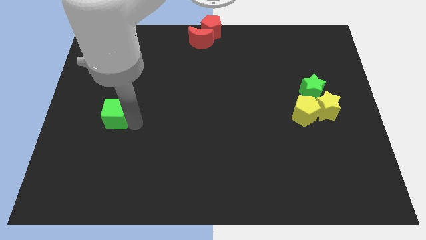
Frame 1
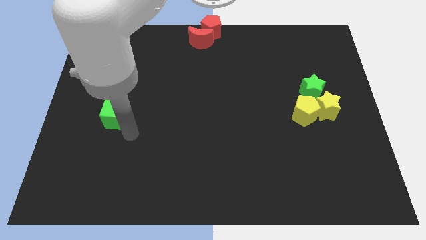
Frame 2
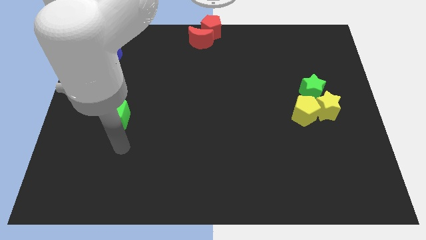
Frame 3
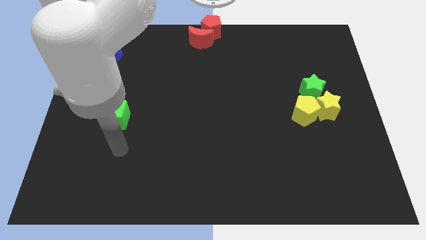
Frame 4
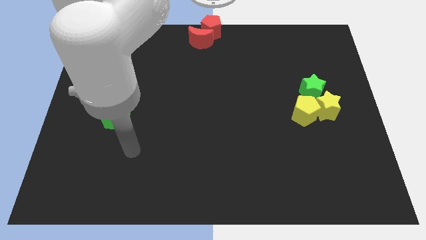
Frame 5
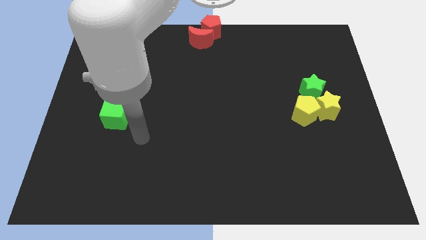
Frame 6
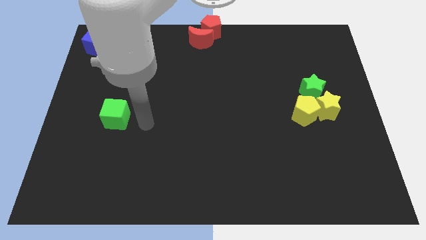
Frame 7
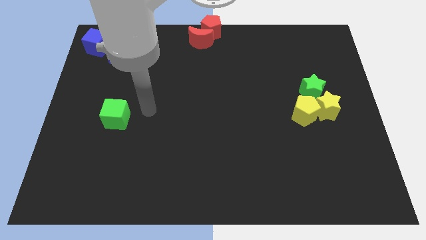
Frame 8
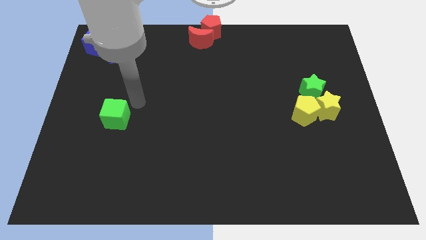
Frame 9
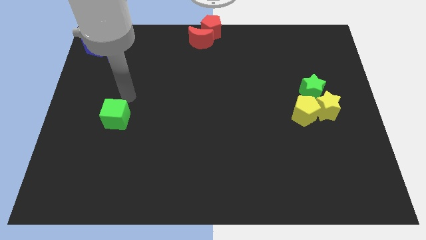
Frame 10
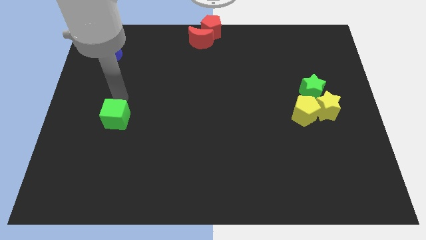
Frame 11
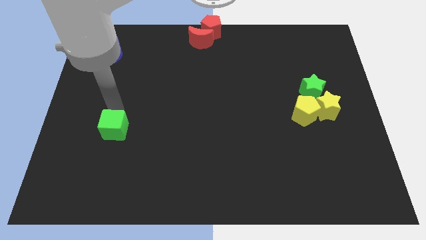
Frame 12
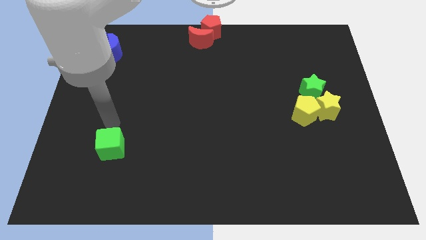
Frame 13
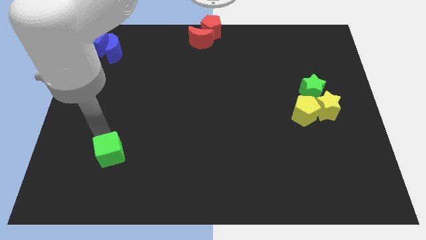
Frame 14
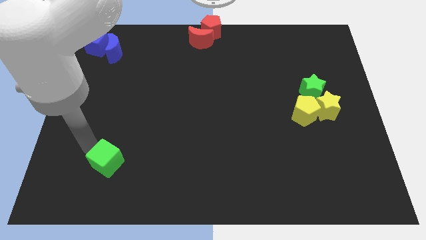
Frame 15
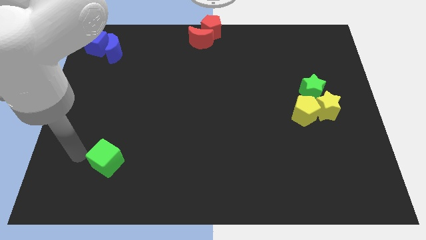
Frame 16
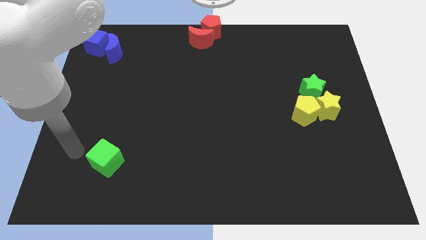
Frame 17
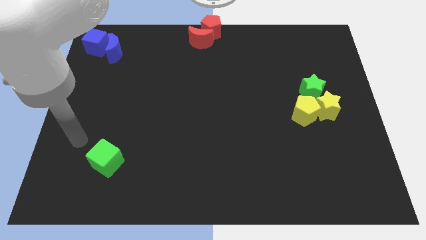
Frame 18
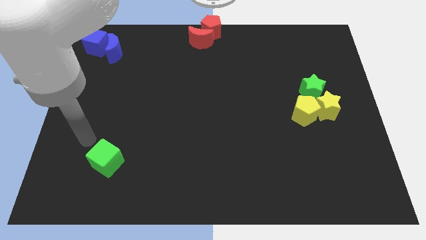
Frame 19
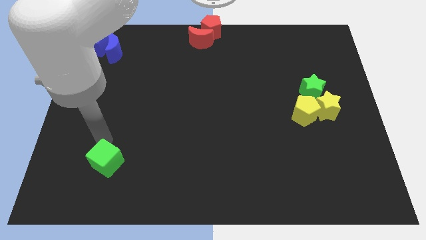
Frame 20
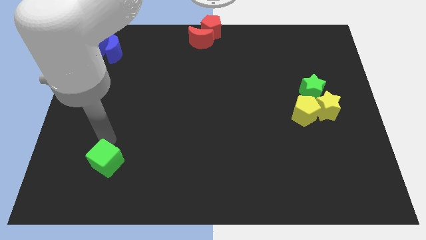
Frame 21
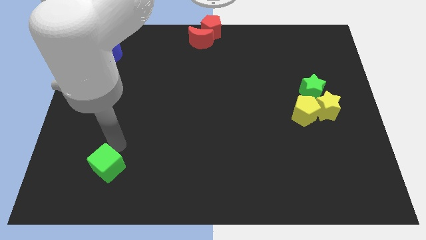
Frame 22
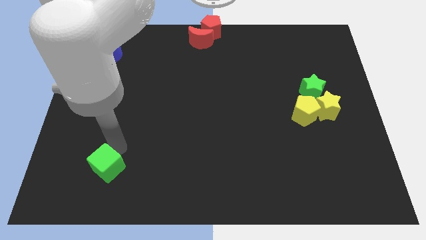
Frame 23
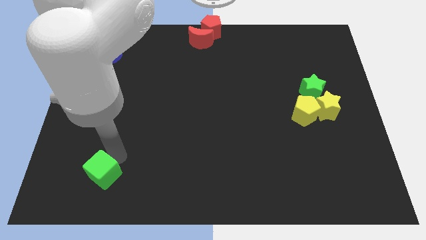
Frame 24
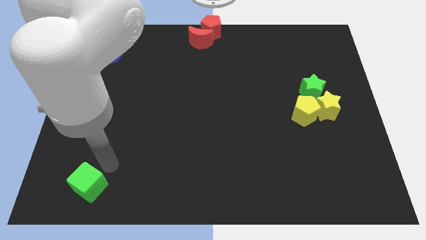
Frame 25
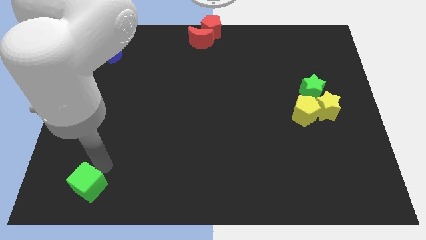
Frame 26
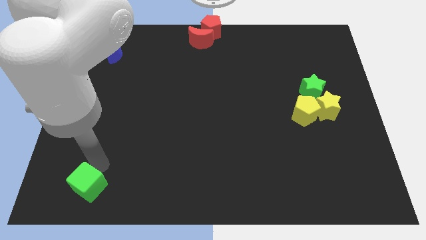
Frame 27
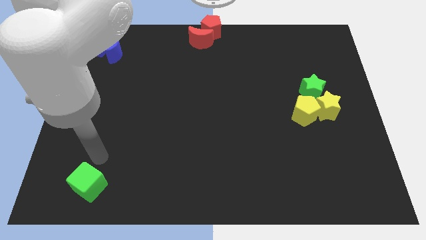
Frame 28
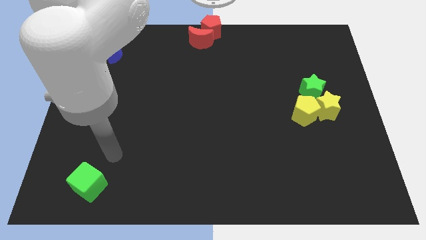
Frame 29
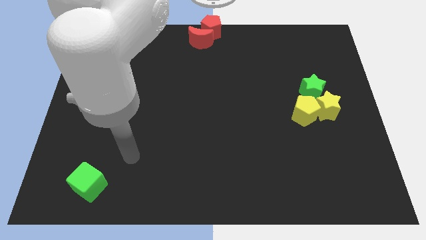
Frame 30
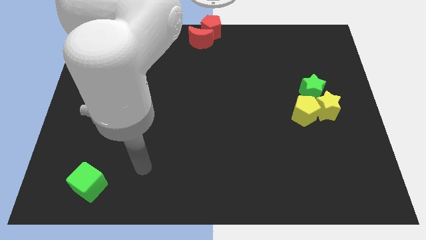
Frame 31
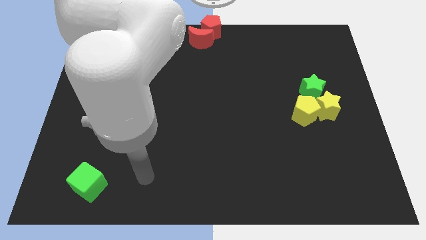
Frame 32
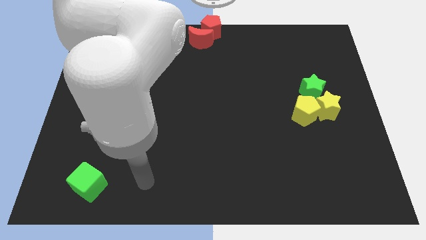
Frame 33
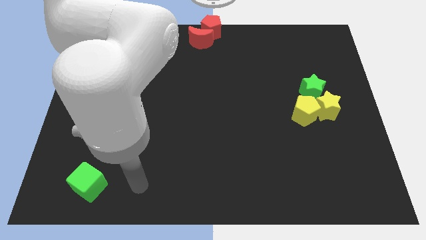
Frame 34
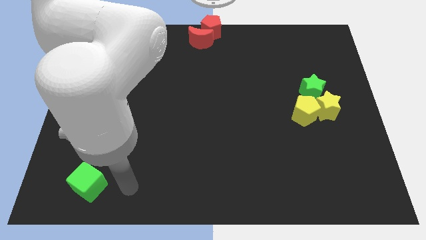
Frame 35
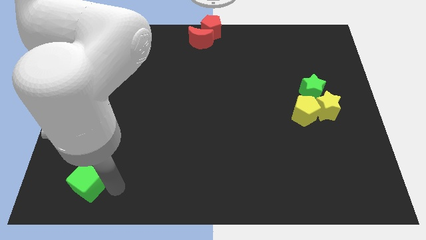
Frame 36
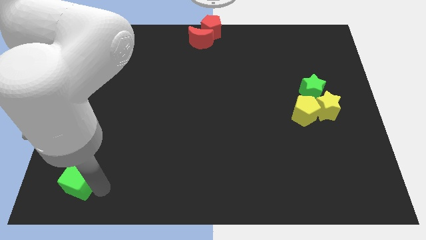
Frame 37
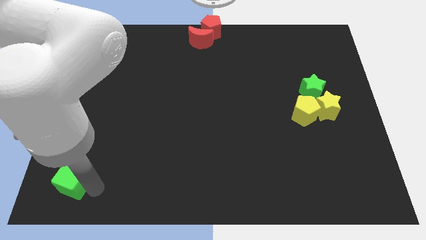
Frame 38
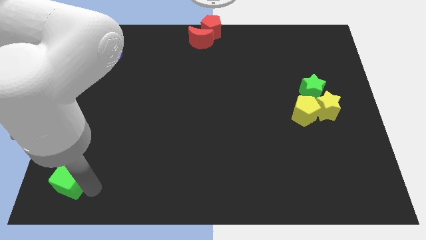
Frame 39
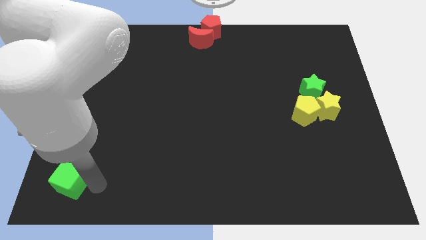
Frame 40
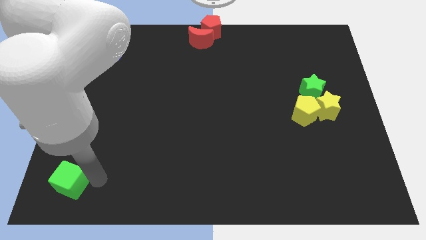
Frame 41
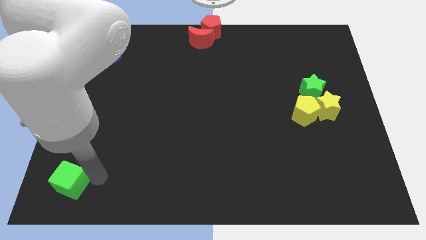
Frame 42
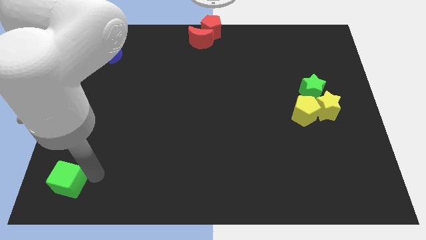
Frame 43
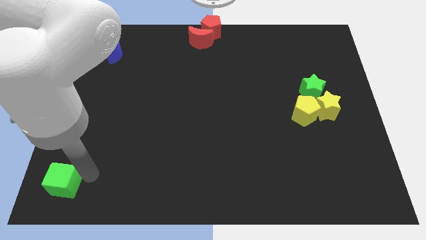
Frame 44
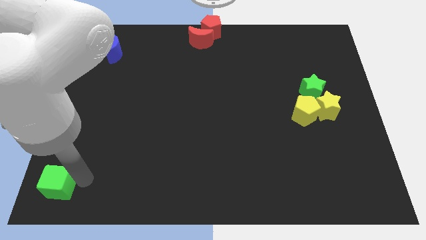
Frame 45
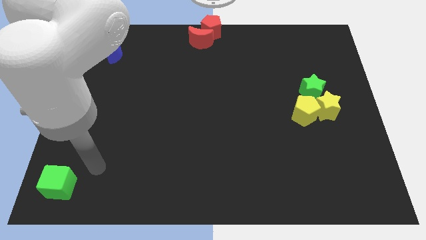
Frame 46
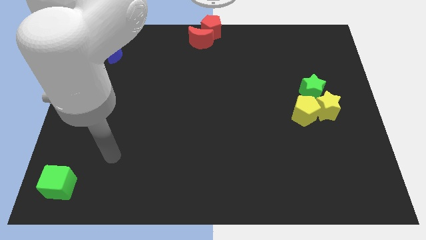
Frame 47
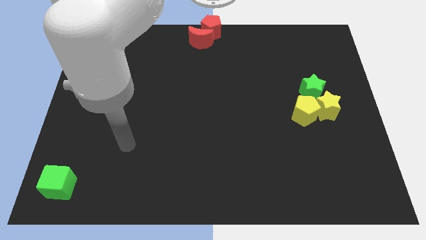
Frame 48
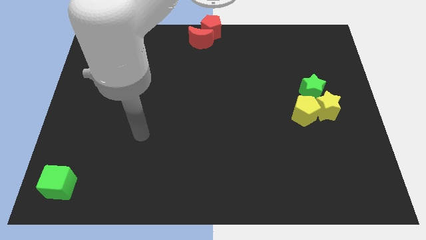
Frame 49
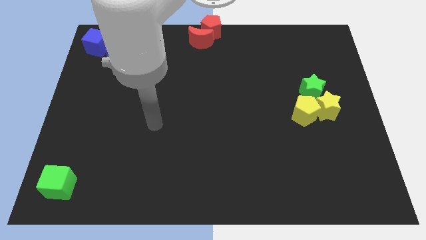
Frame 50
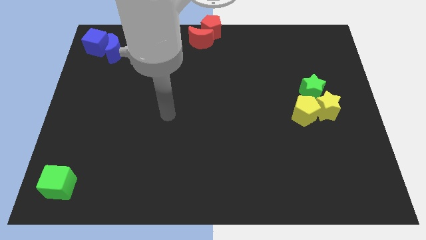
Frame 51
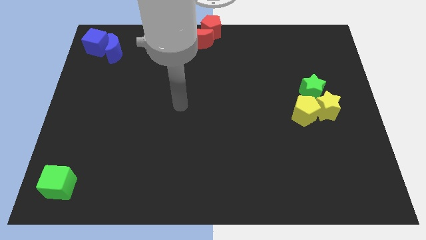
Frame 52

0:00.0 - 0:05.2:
move green cube to the bottom left corner of the board

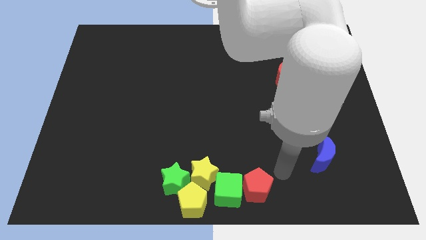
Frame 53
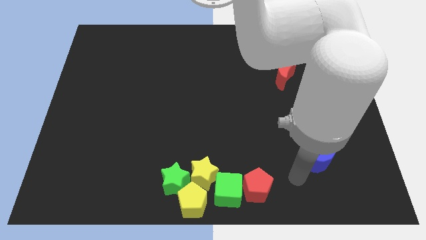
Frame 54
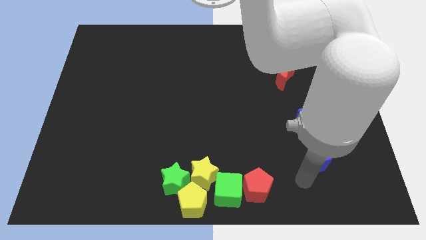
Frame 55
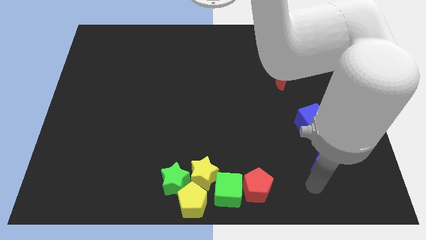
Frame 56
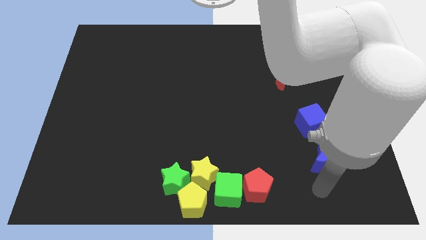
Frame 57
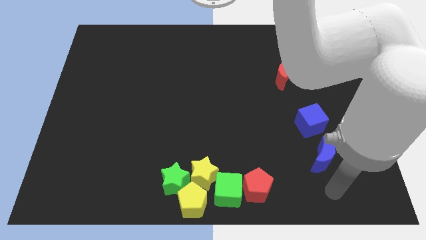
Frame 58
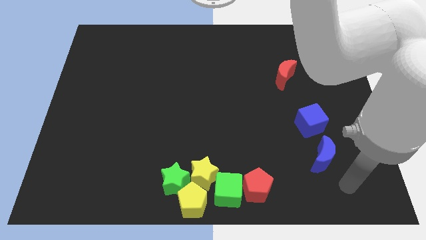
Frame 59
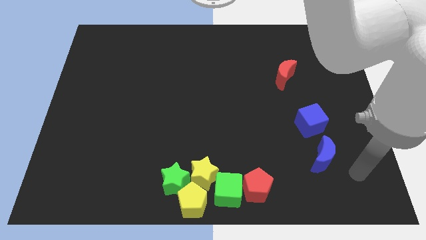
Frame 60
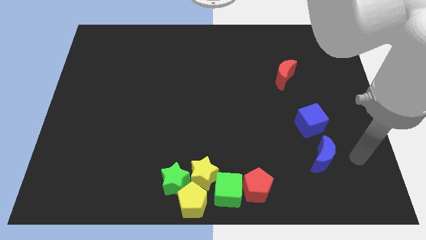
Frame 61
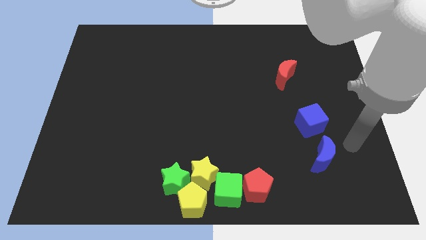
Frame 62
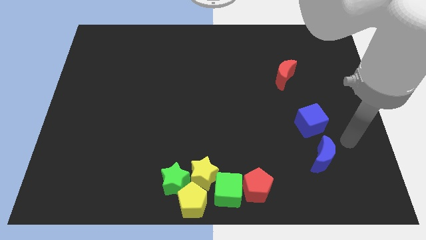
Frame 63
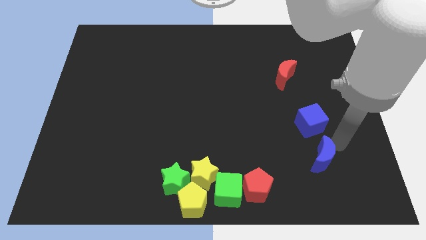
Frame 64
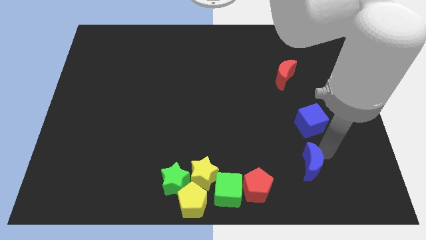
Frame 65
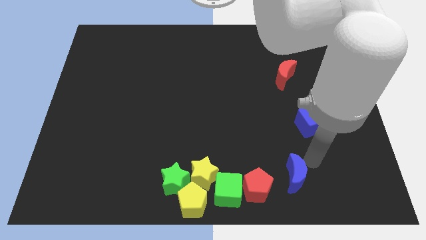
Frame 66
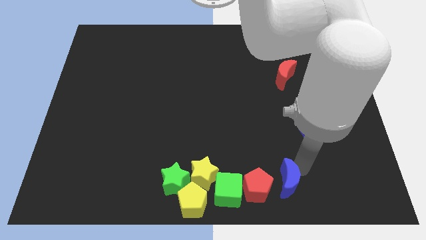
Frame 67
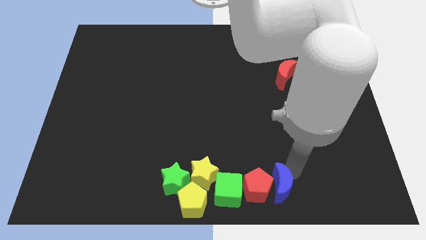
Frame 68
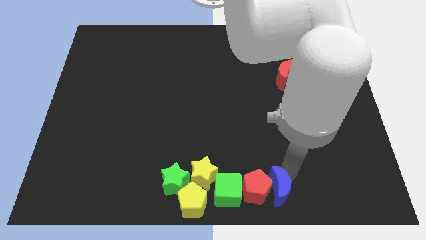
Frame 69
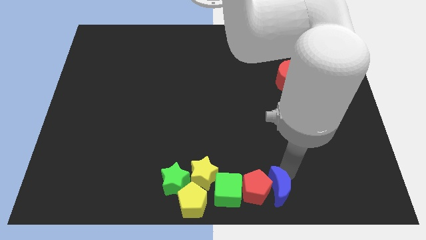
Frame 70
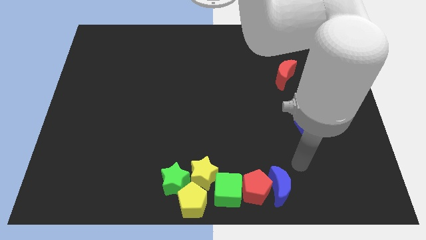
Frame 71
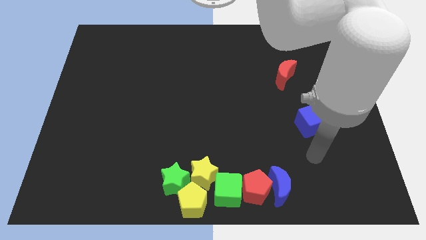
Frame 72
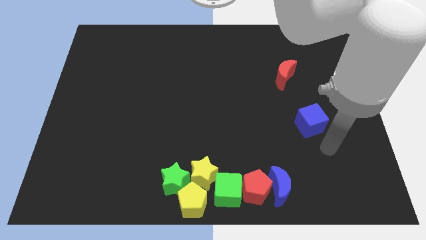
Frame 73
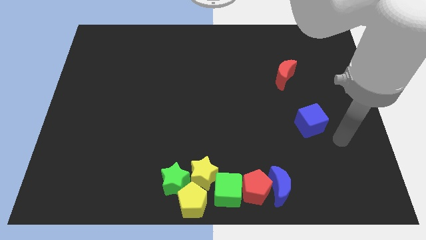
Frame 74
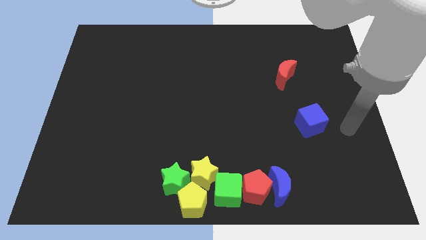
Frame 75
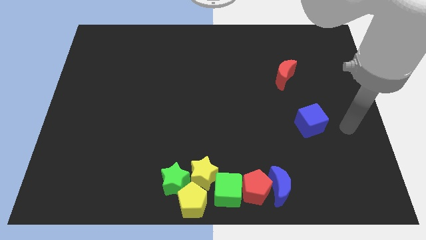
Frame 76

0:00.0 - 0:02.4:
move the blue crescent into the red pentagon

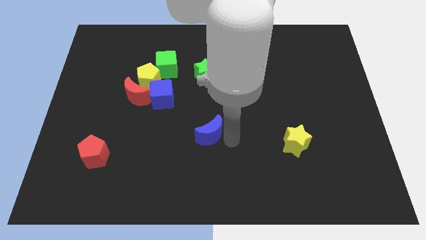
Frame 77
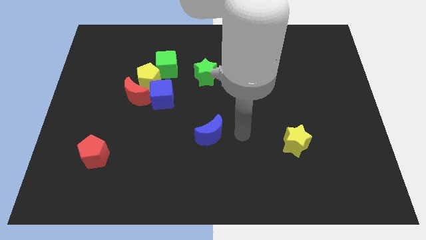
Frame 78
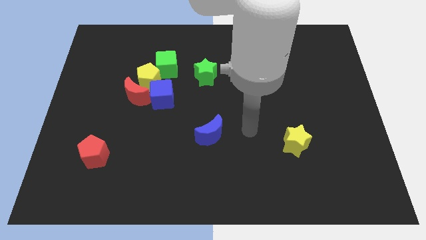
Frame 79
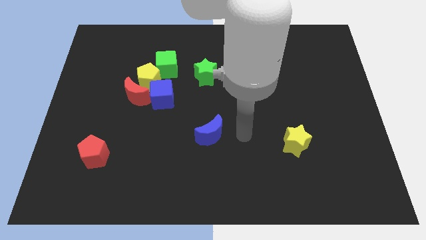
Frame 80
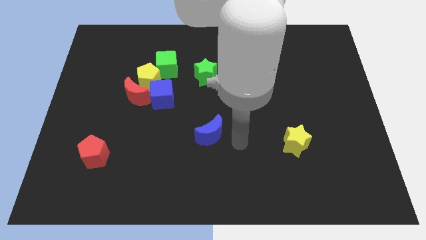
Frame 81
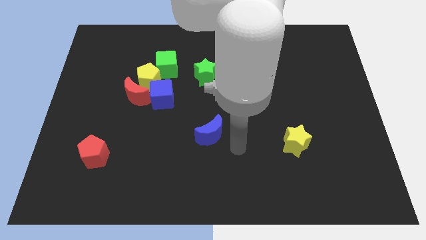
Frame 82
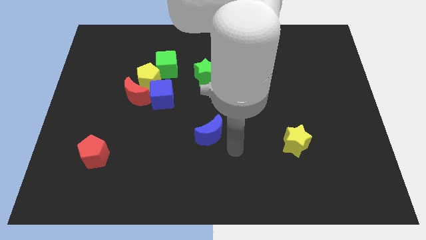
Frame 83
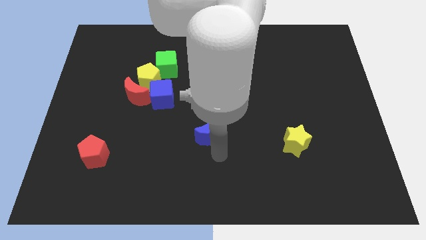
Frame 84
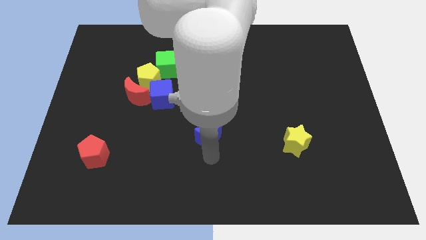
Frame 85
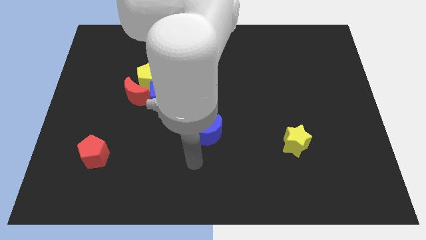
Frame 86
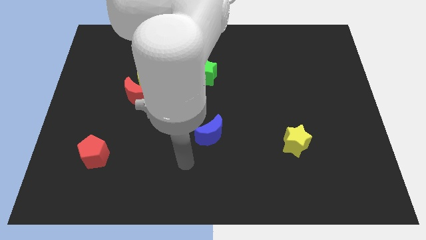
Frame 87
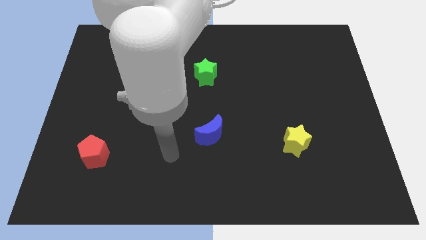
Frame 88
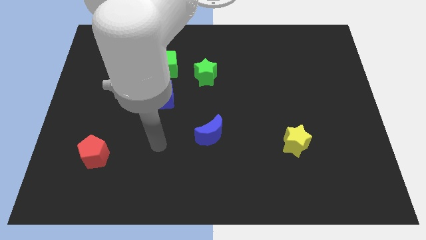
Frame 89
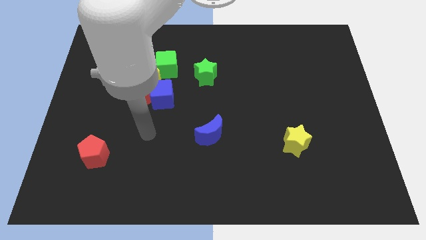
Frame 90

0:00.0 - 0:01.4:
move the arm to the left of the blue crescent
